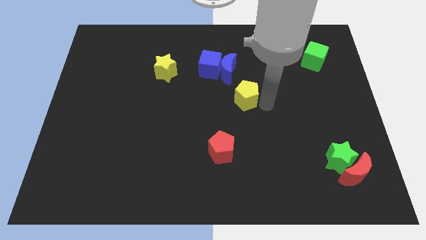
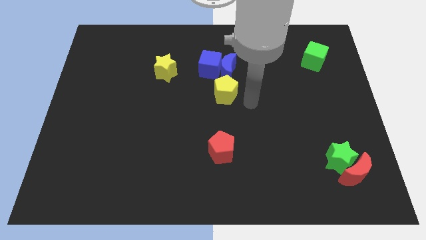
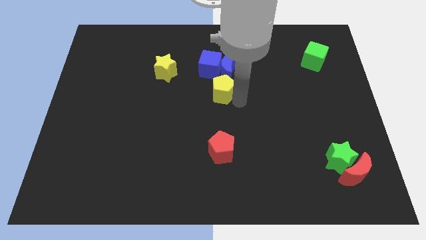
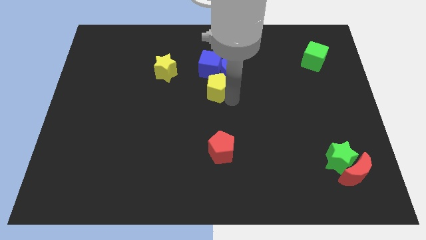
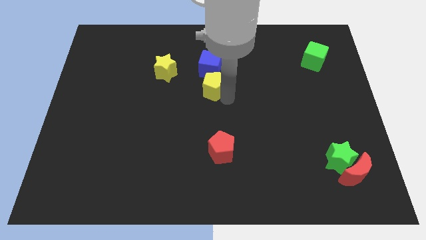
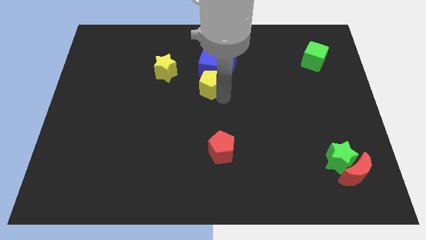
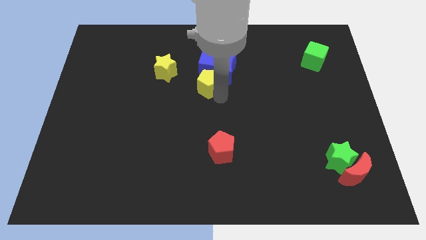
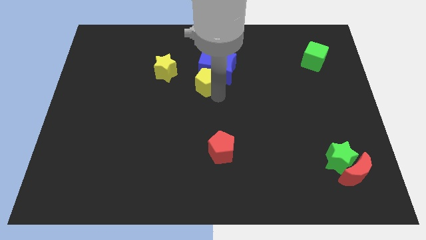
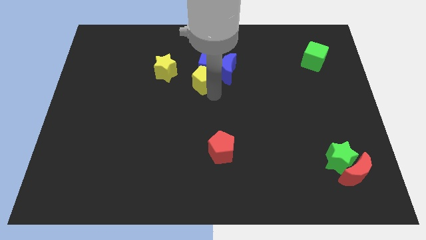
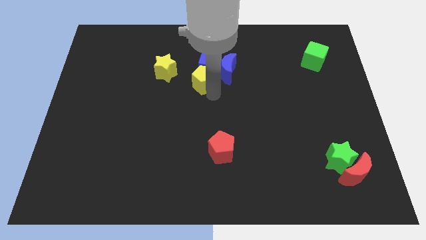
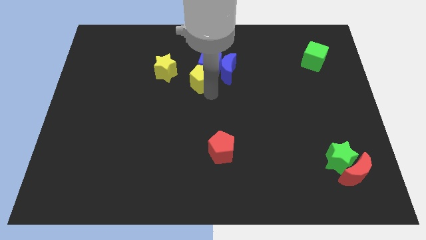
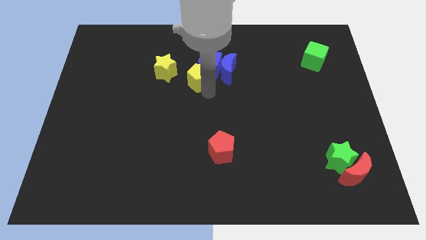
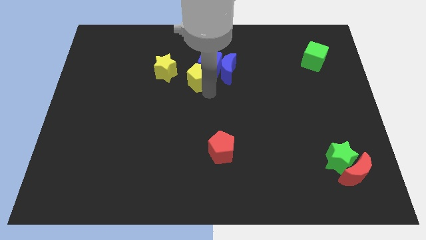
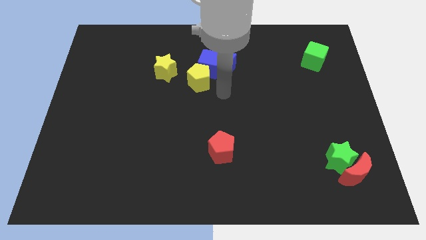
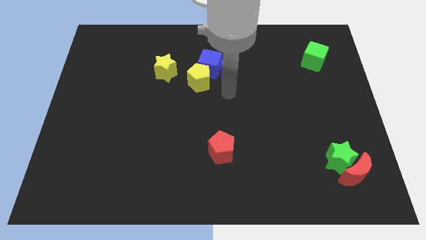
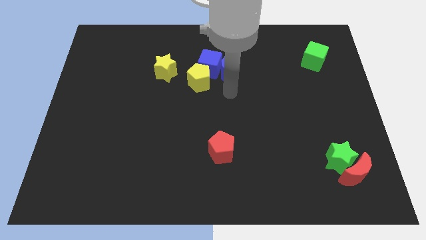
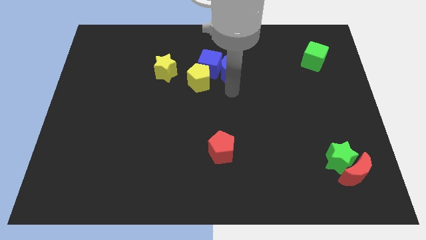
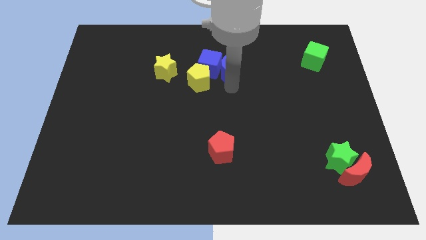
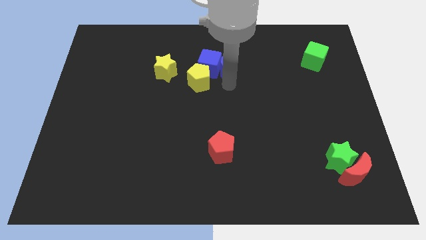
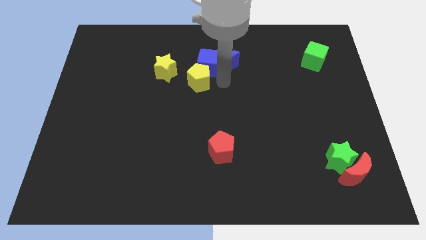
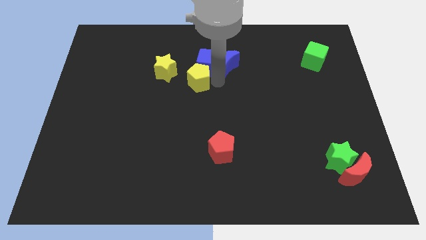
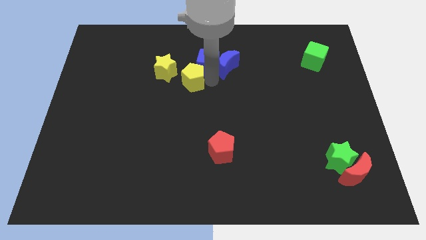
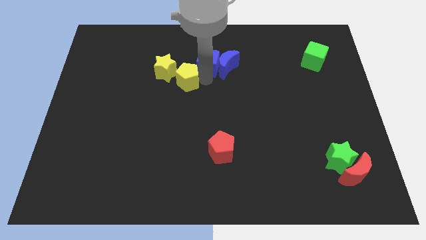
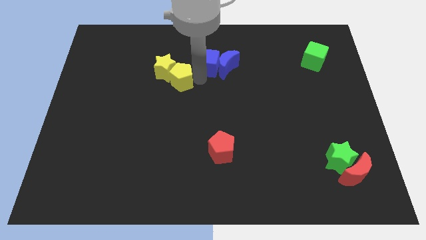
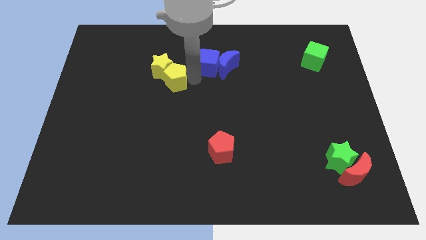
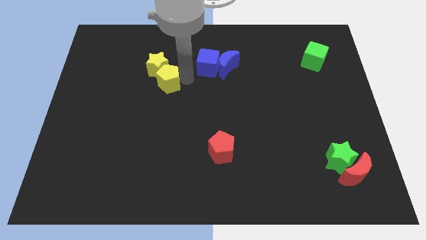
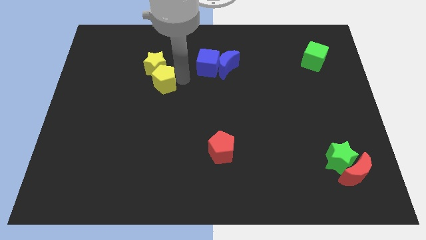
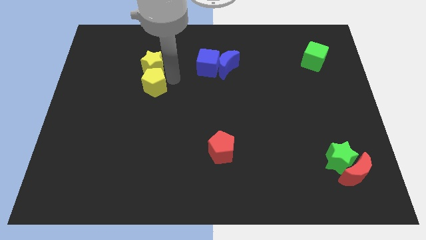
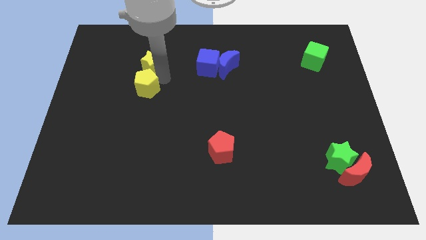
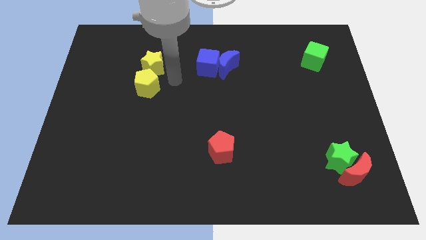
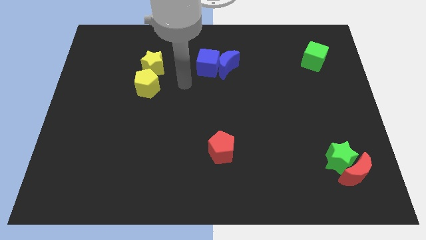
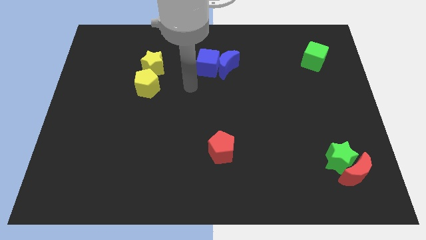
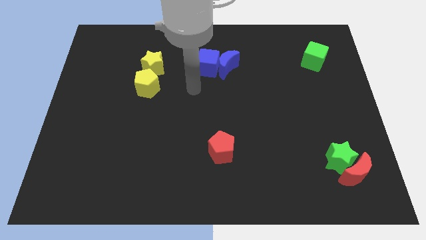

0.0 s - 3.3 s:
place the yellow pentagon down the yellow star

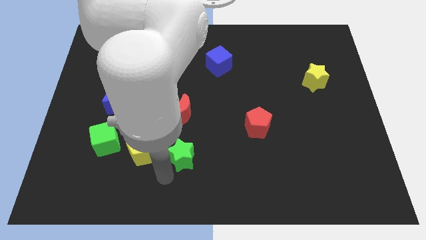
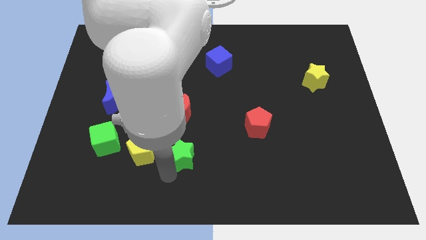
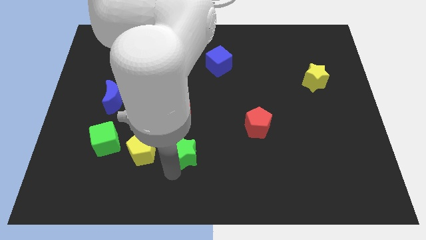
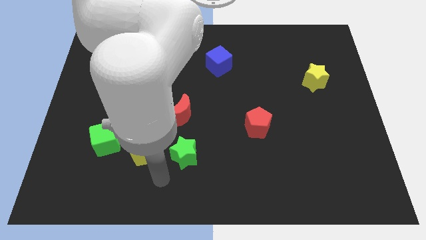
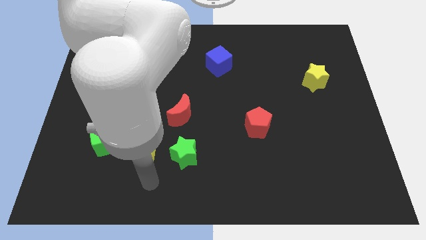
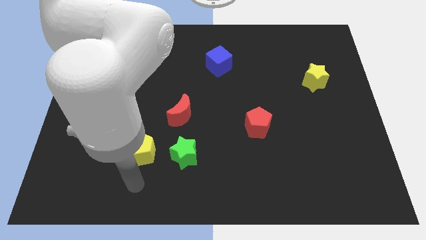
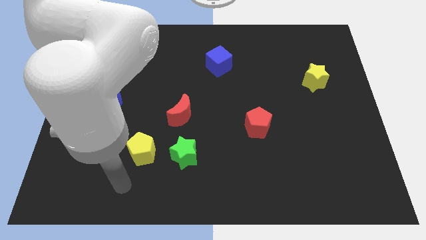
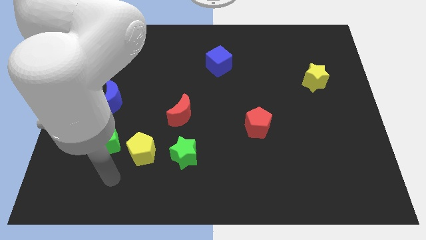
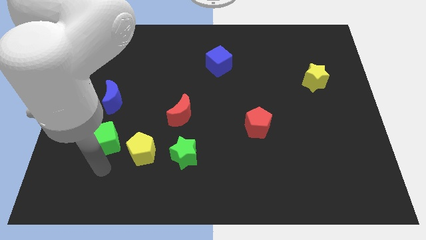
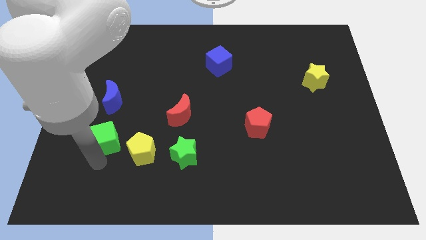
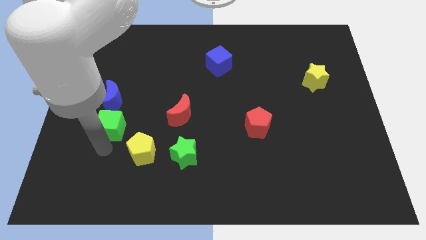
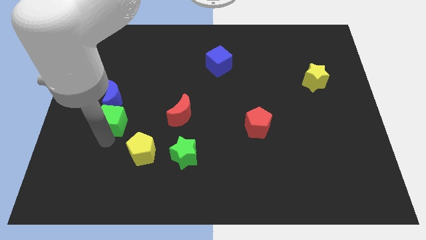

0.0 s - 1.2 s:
move the green star right beside the yellow pentagon

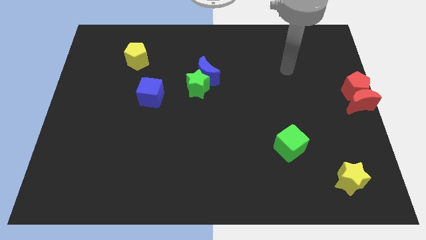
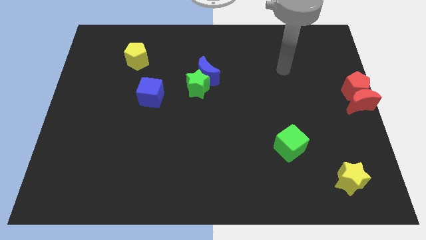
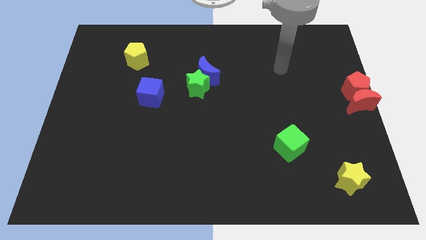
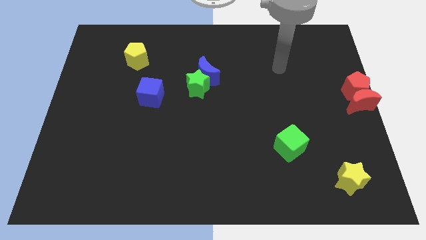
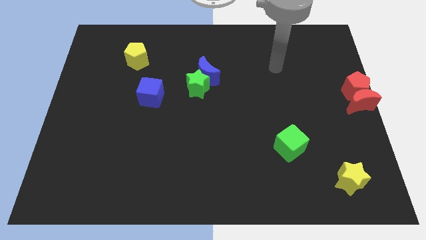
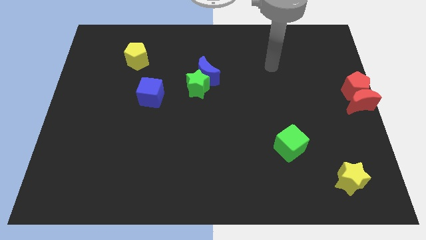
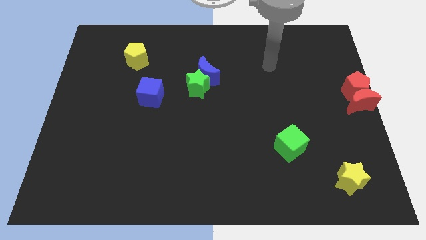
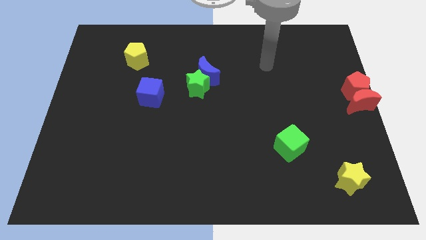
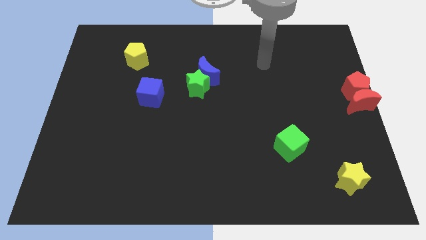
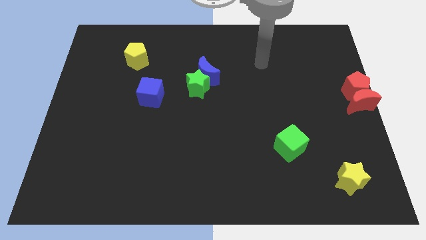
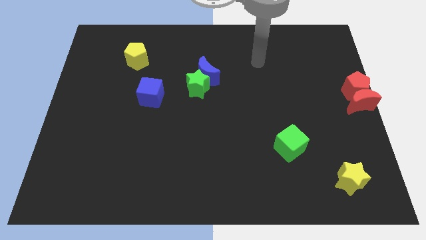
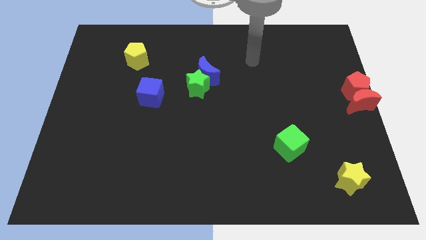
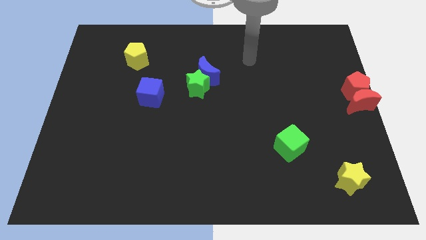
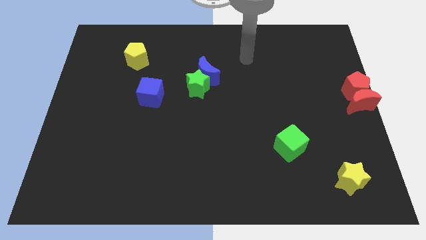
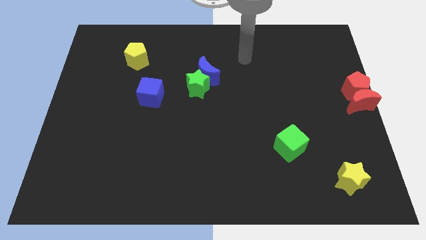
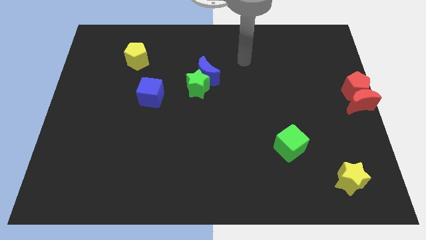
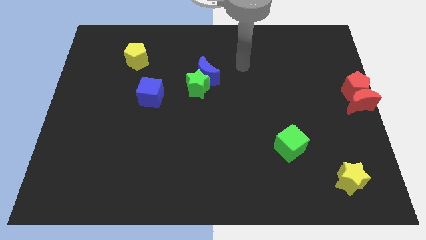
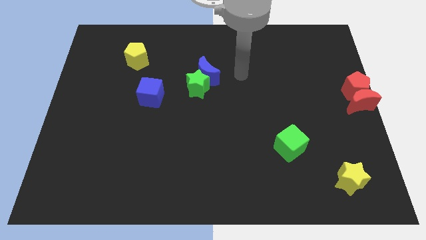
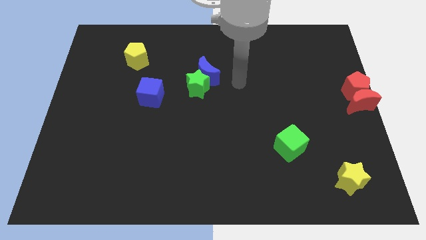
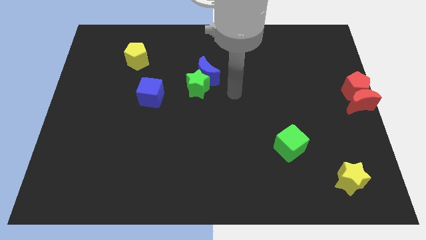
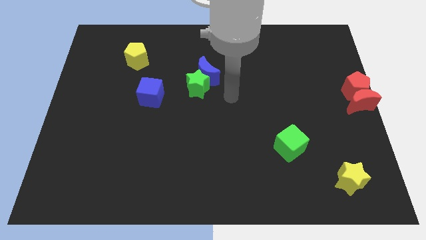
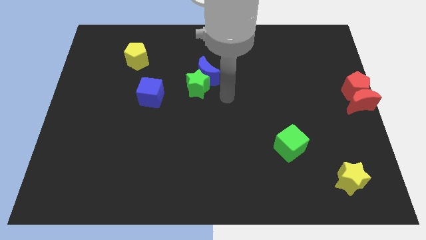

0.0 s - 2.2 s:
go and point your hand at the center of the board

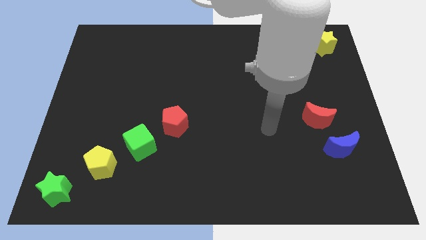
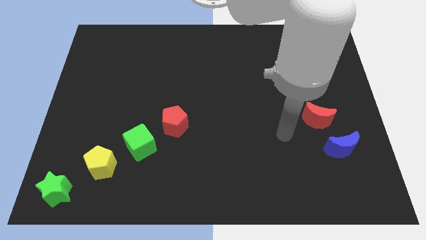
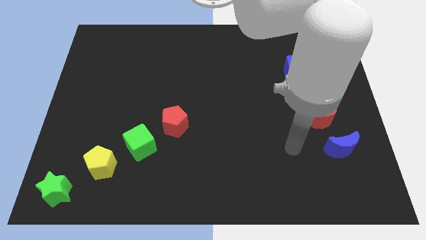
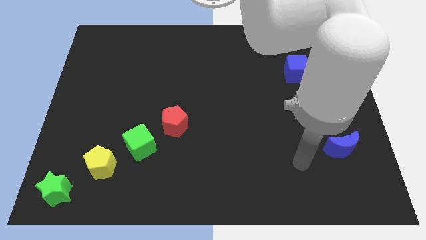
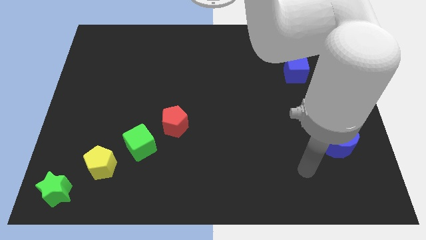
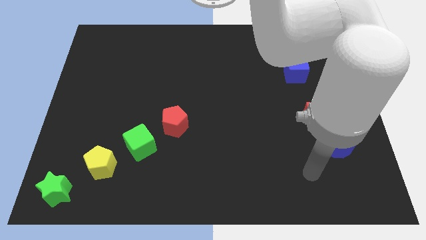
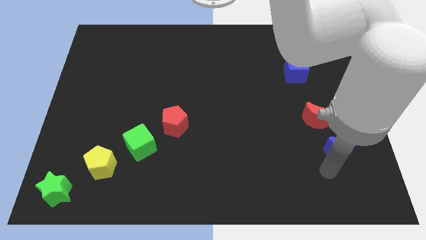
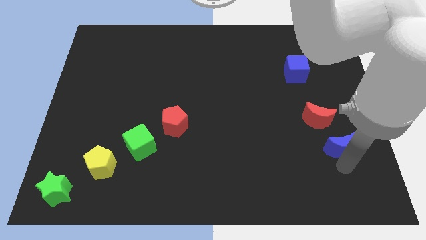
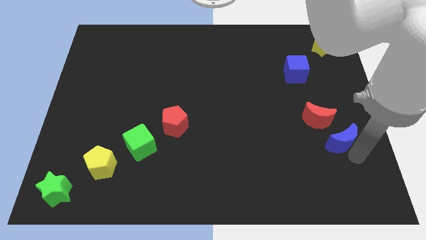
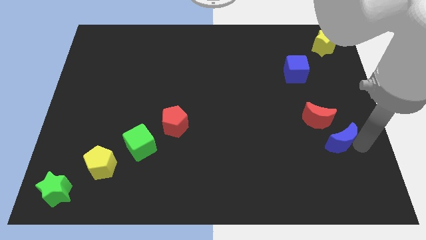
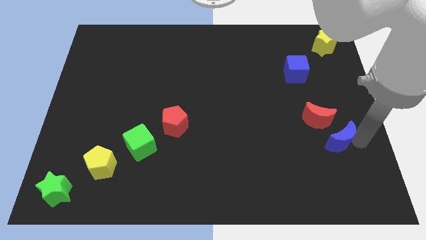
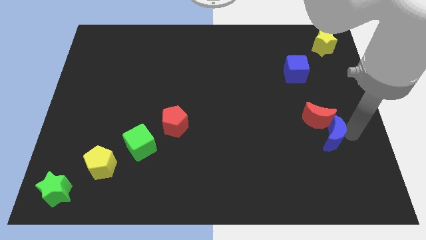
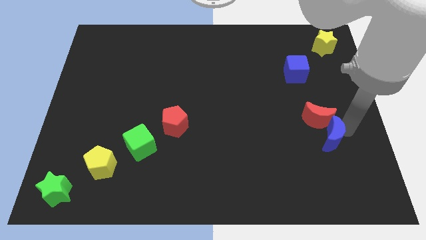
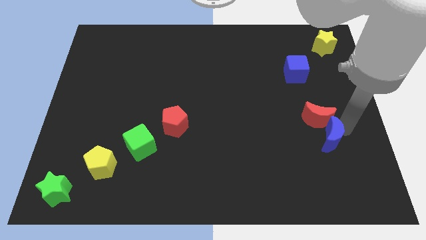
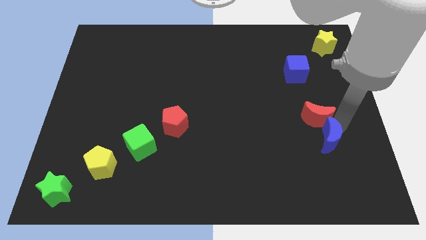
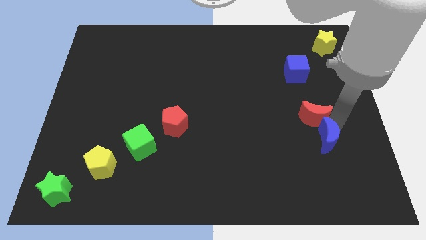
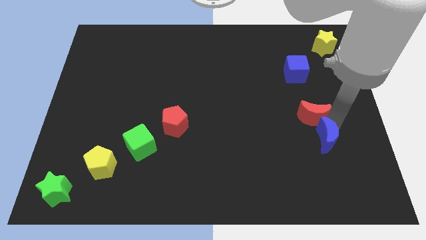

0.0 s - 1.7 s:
put the blue and red crescents together

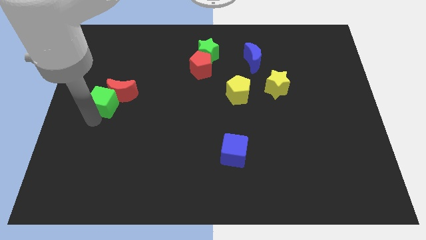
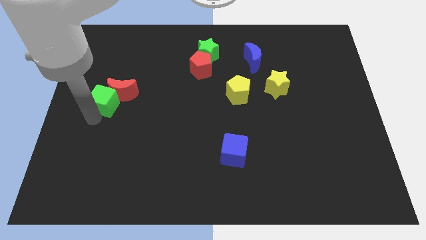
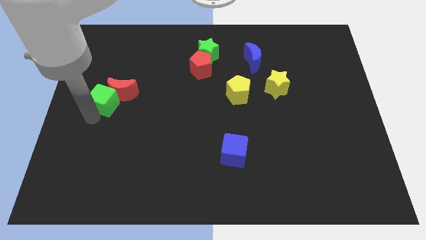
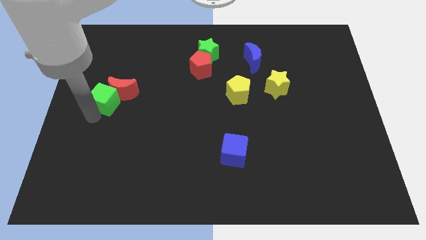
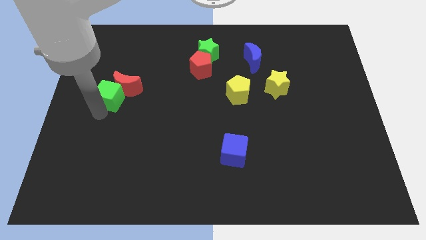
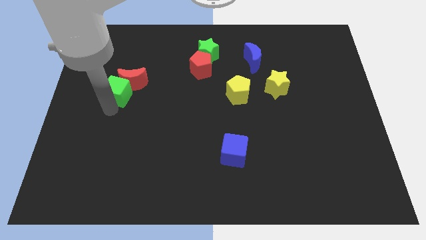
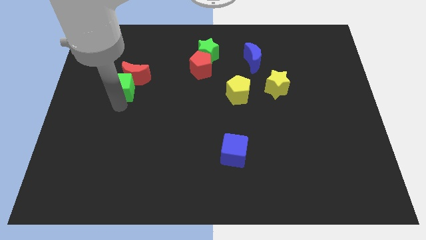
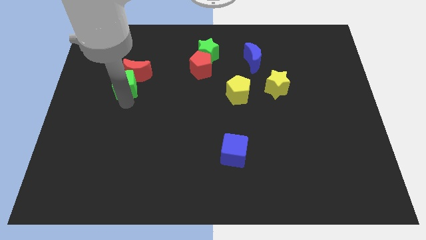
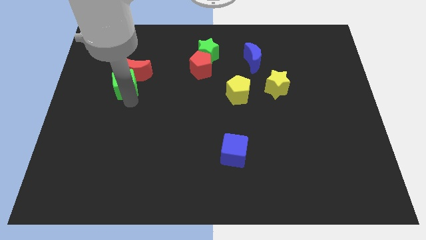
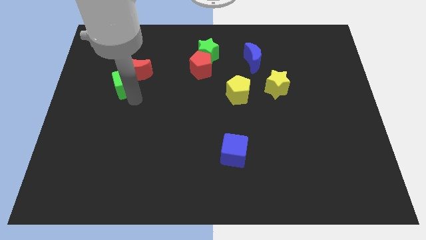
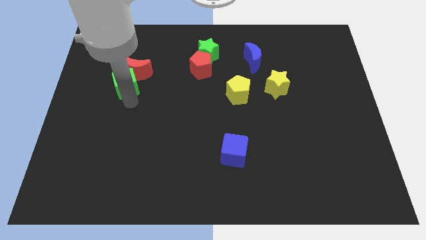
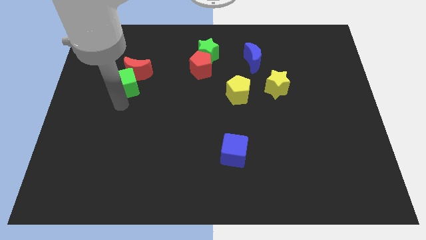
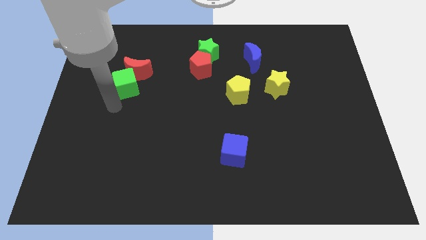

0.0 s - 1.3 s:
move the green cube along with red moon towards the top of the board
